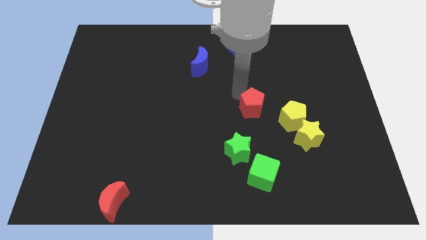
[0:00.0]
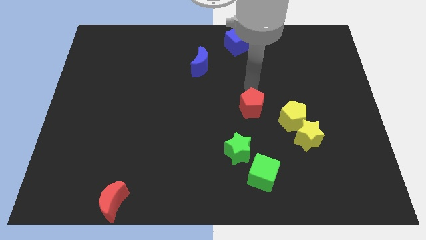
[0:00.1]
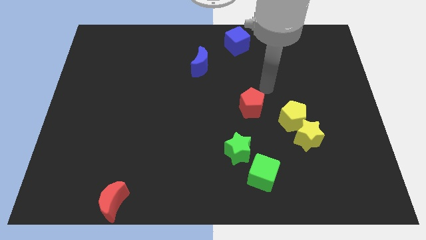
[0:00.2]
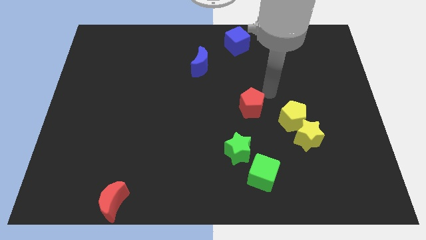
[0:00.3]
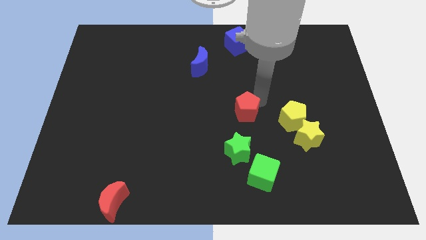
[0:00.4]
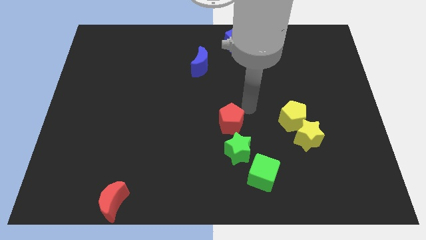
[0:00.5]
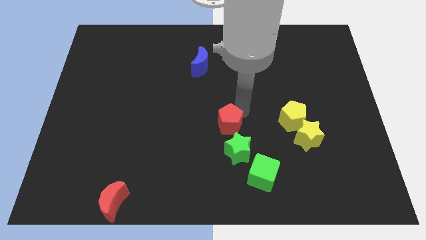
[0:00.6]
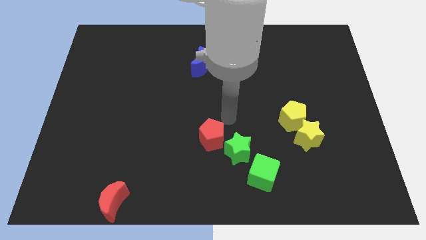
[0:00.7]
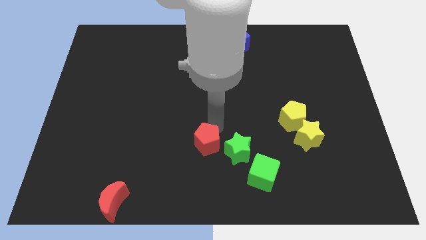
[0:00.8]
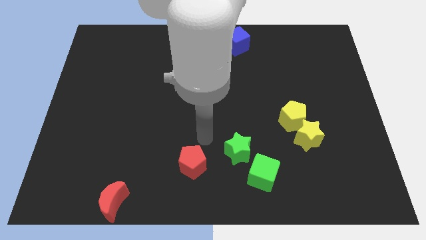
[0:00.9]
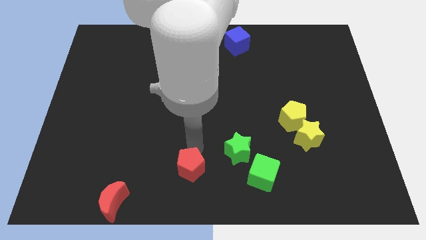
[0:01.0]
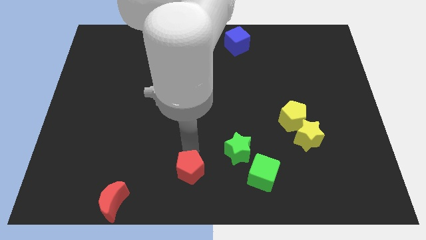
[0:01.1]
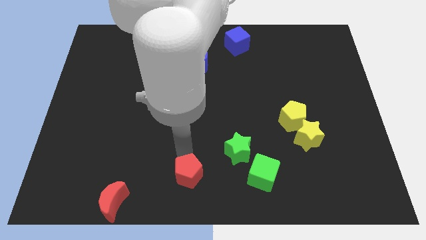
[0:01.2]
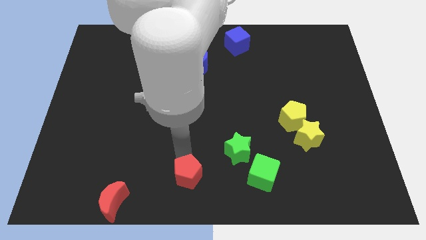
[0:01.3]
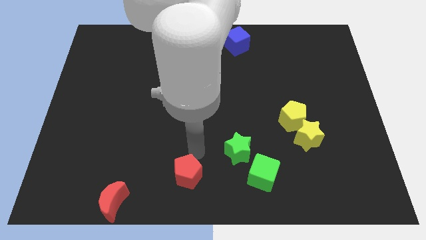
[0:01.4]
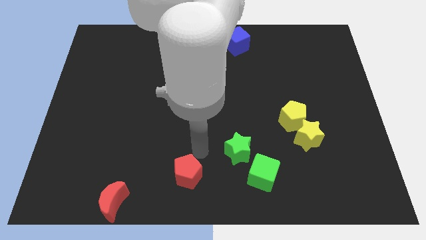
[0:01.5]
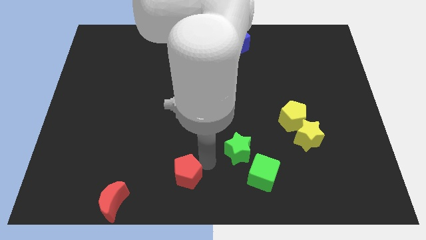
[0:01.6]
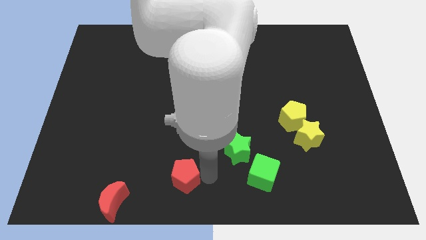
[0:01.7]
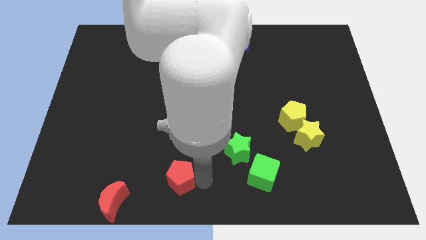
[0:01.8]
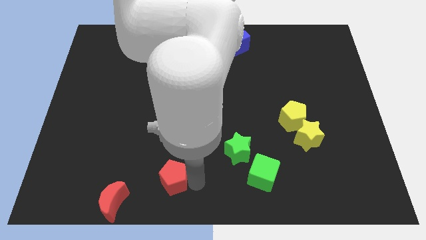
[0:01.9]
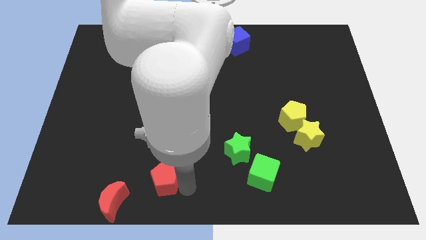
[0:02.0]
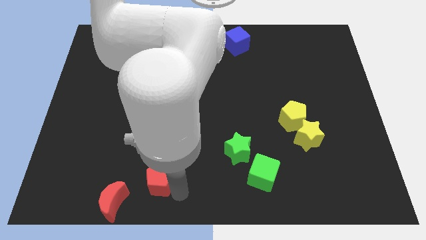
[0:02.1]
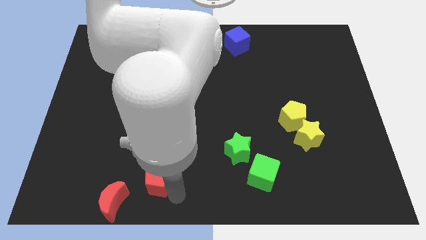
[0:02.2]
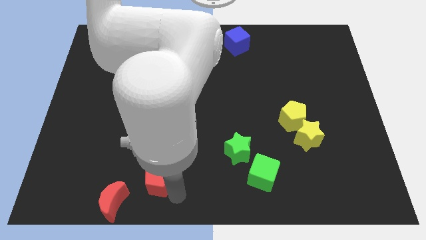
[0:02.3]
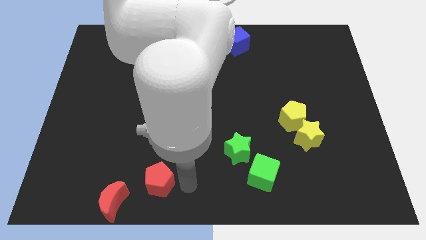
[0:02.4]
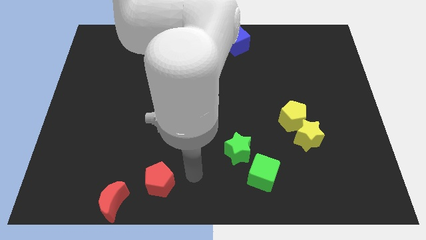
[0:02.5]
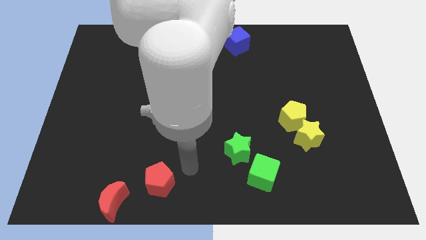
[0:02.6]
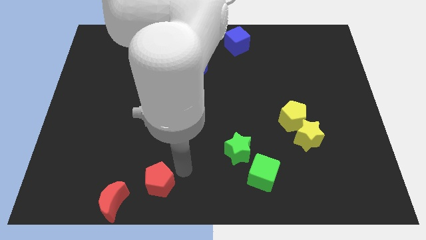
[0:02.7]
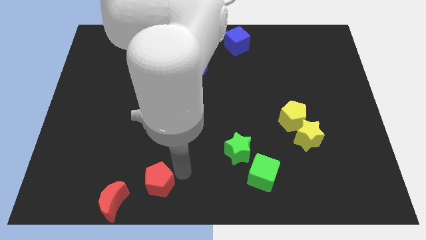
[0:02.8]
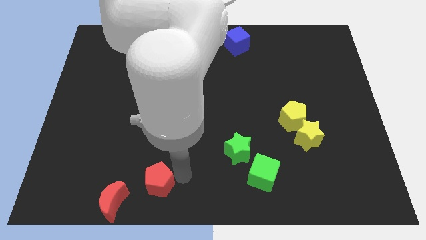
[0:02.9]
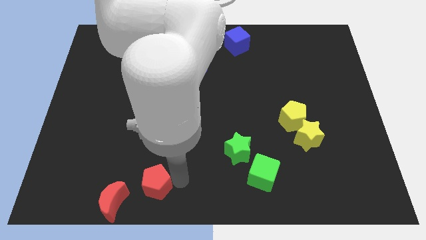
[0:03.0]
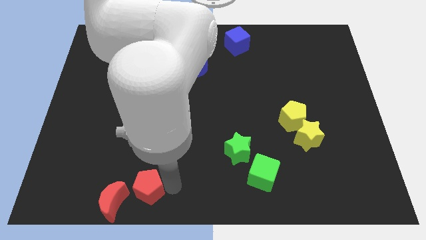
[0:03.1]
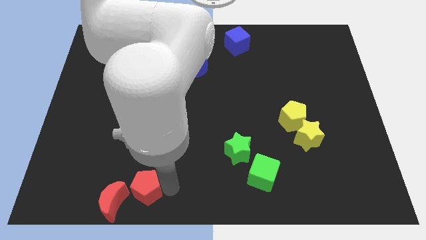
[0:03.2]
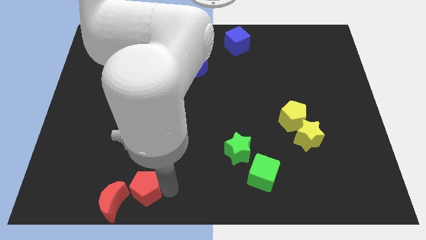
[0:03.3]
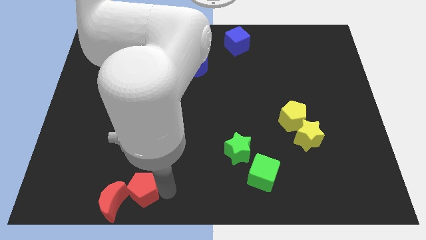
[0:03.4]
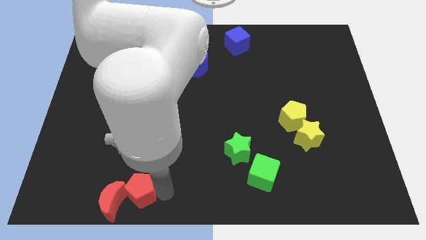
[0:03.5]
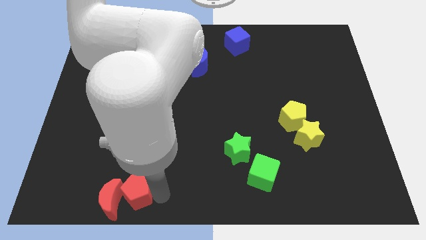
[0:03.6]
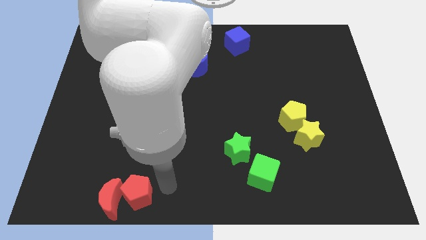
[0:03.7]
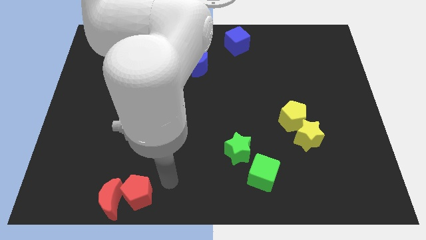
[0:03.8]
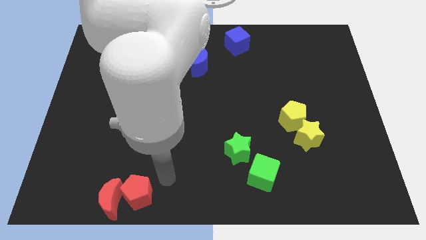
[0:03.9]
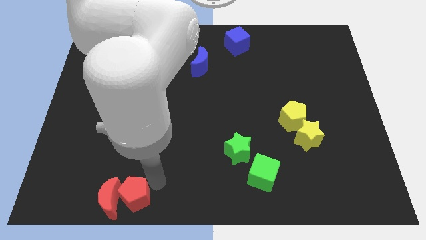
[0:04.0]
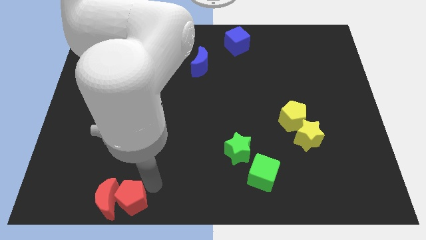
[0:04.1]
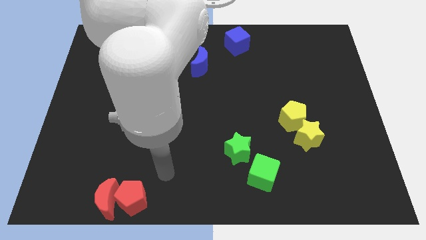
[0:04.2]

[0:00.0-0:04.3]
place the red pentagon to the right side of red moon

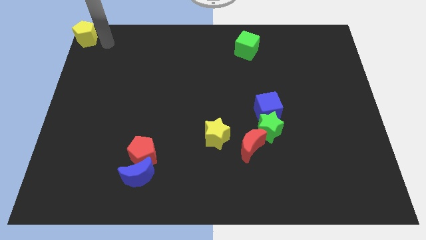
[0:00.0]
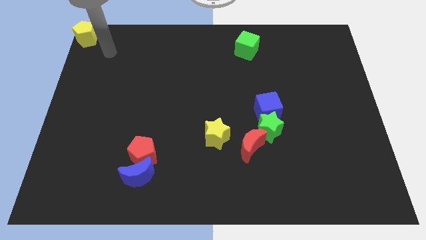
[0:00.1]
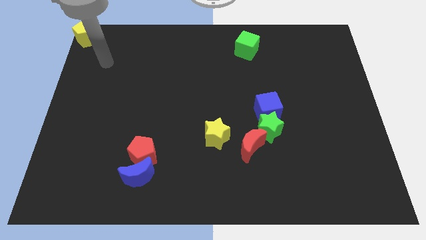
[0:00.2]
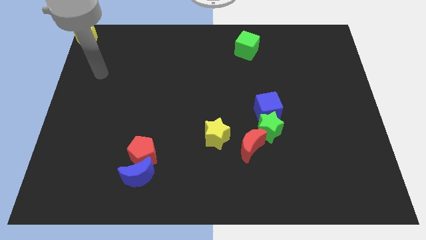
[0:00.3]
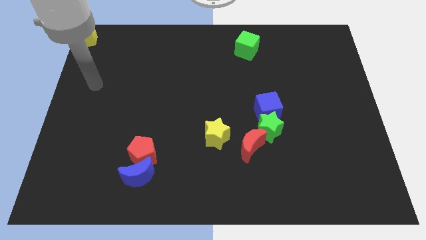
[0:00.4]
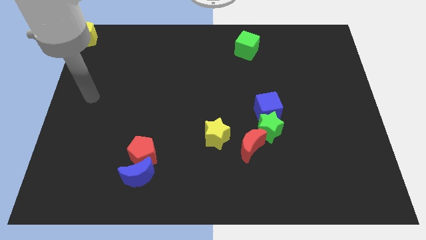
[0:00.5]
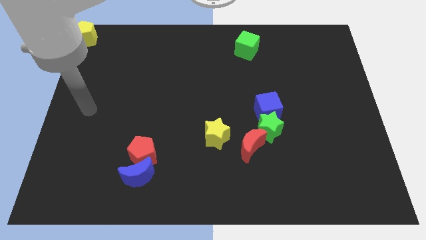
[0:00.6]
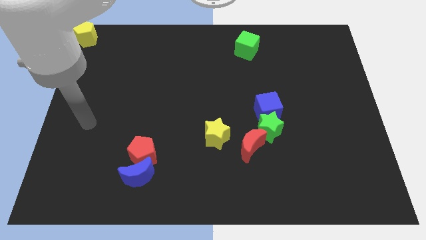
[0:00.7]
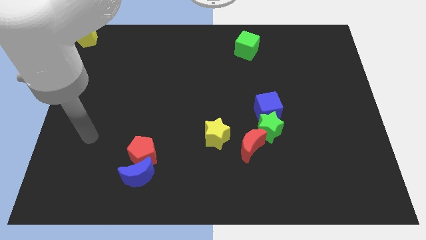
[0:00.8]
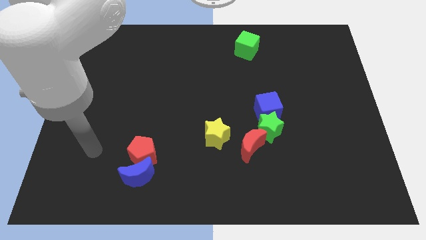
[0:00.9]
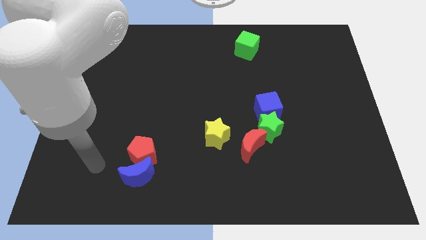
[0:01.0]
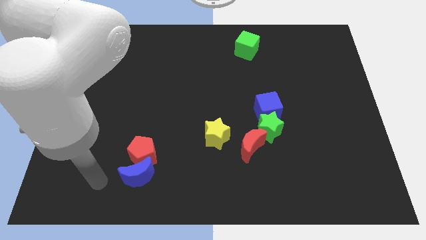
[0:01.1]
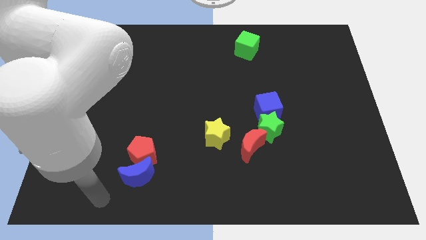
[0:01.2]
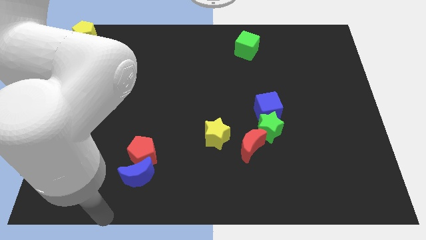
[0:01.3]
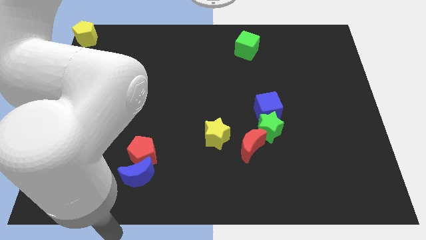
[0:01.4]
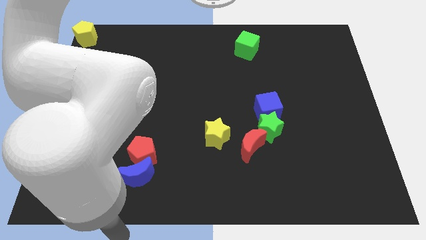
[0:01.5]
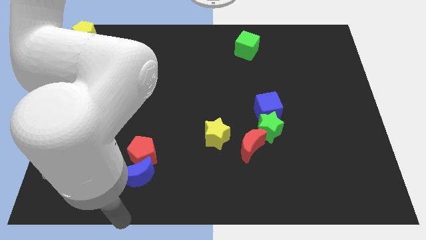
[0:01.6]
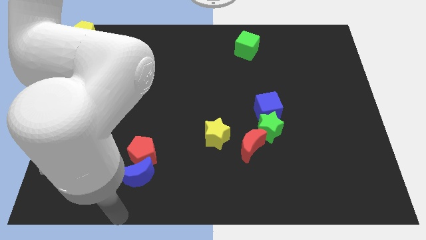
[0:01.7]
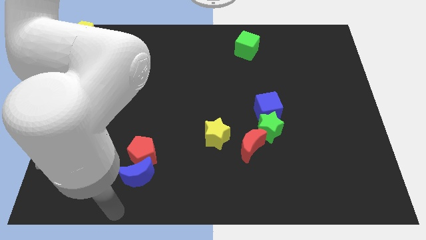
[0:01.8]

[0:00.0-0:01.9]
move your arm away from the yellow pentagon

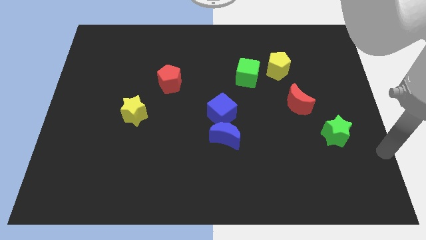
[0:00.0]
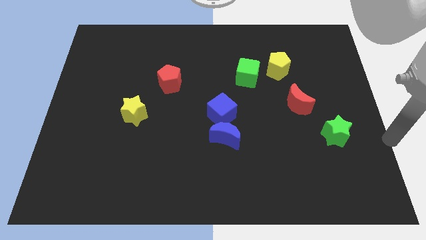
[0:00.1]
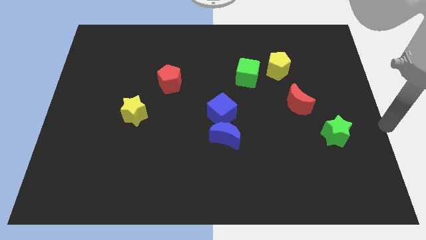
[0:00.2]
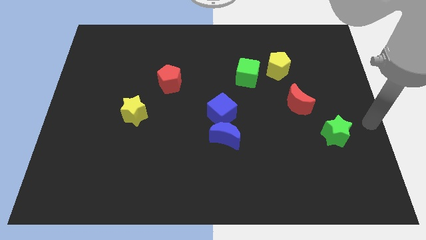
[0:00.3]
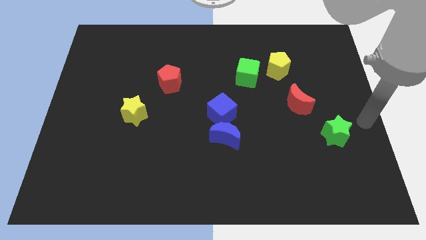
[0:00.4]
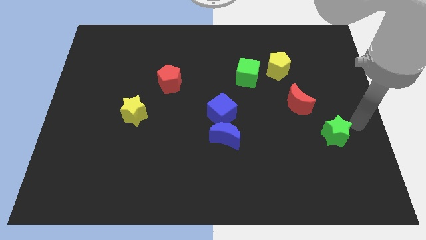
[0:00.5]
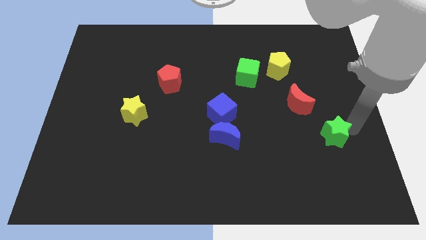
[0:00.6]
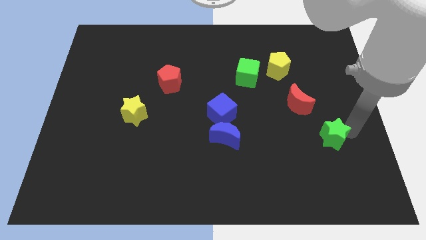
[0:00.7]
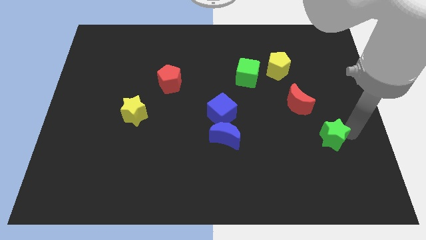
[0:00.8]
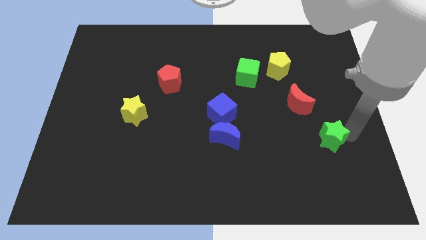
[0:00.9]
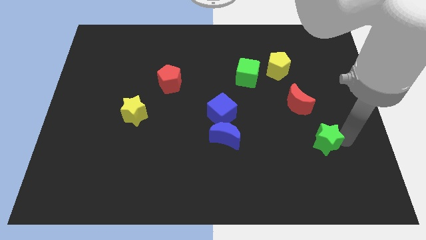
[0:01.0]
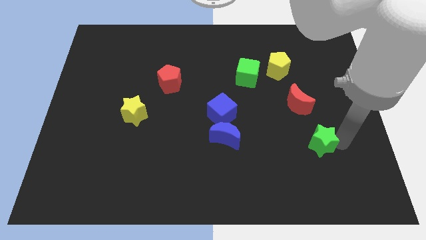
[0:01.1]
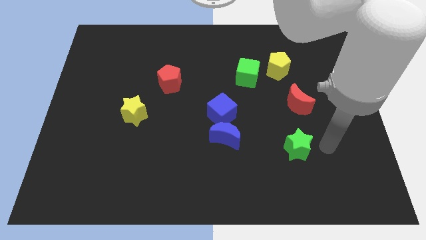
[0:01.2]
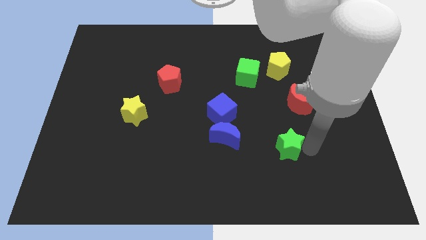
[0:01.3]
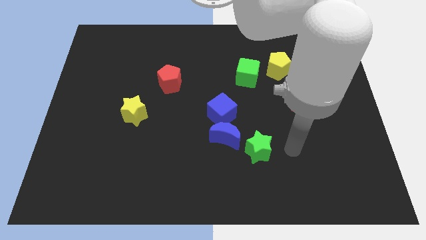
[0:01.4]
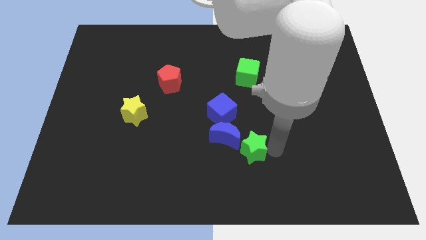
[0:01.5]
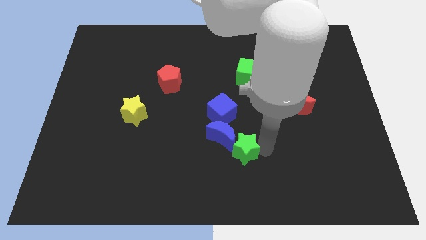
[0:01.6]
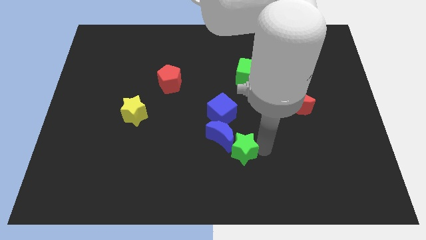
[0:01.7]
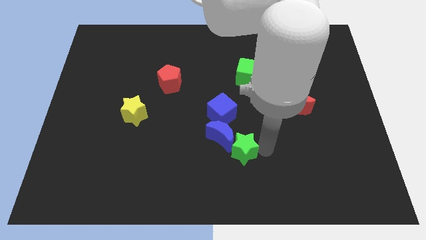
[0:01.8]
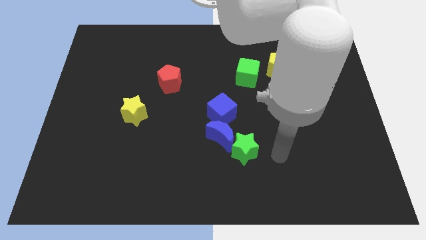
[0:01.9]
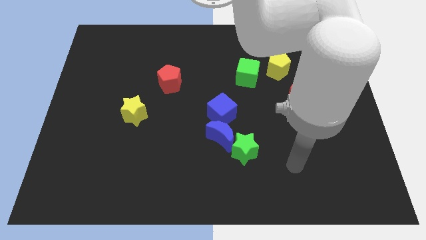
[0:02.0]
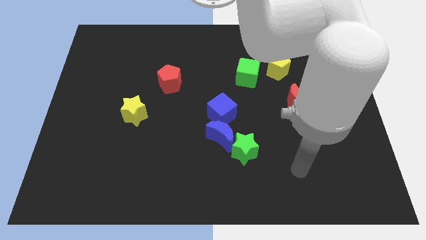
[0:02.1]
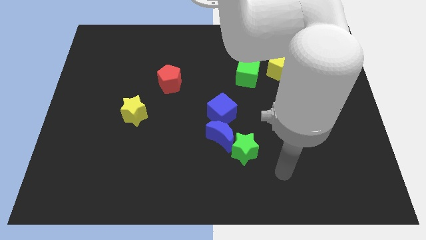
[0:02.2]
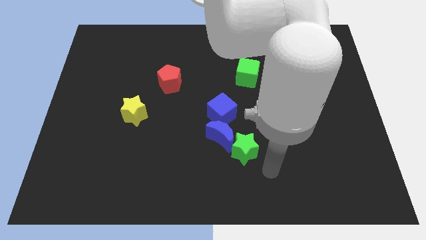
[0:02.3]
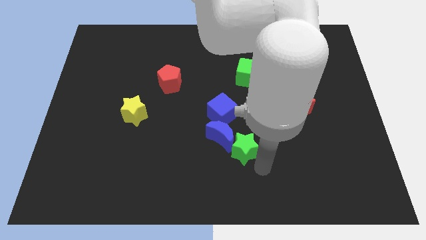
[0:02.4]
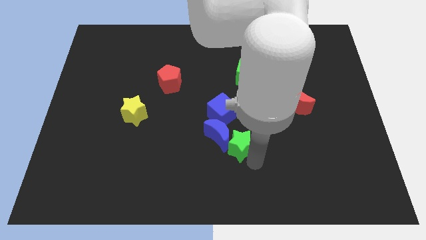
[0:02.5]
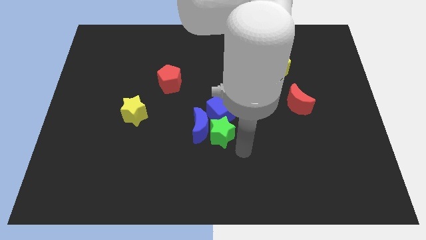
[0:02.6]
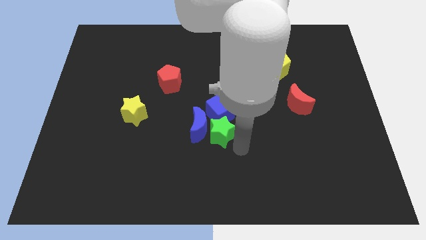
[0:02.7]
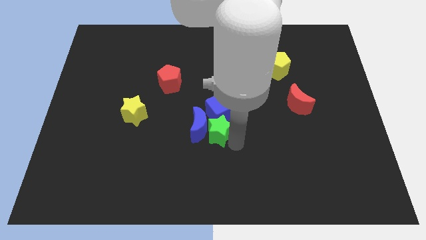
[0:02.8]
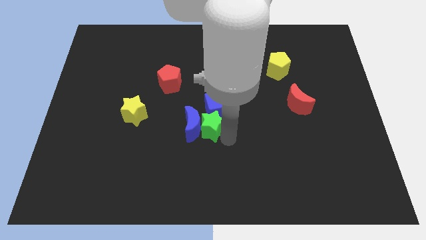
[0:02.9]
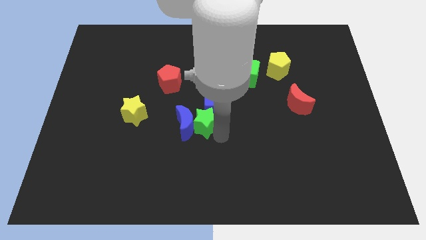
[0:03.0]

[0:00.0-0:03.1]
push green star to the right blue moon
